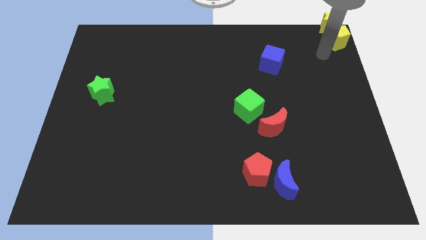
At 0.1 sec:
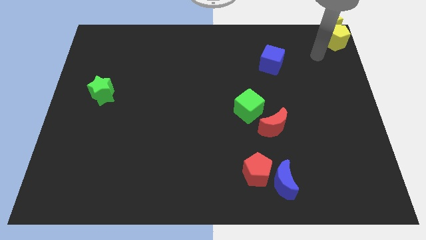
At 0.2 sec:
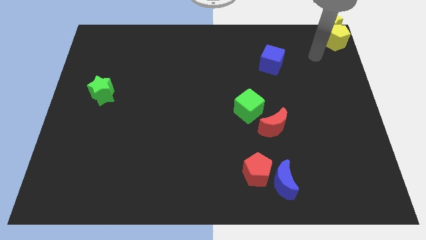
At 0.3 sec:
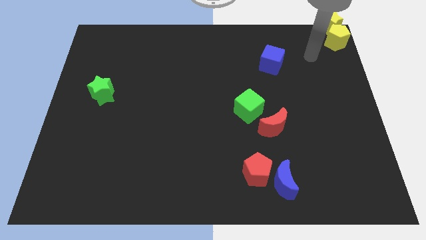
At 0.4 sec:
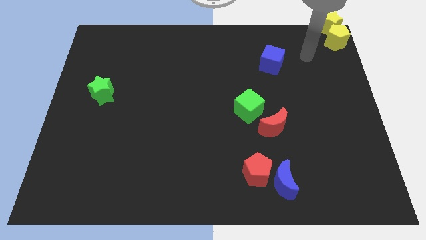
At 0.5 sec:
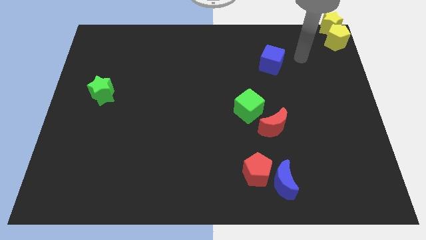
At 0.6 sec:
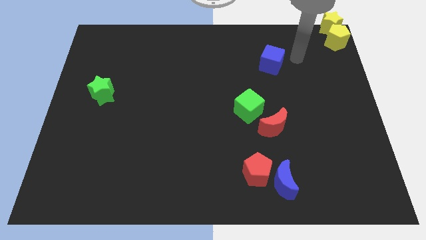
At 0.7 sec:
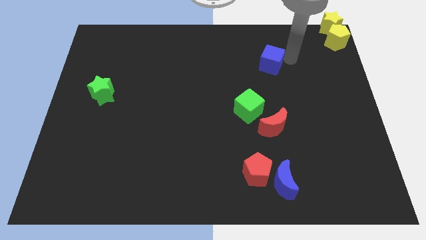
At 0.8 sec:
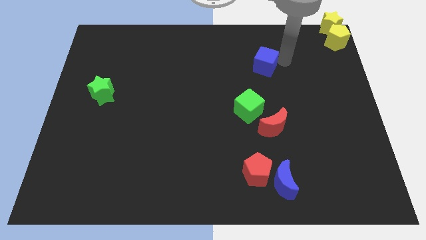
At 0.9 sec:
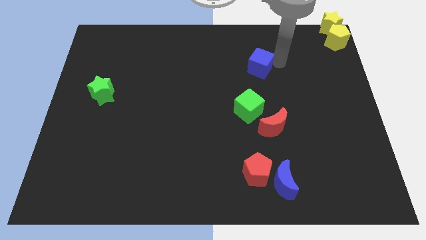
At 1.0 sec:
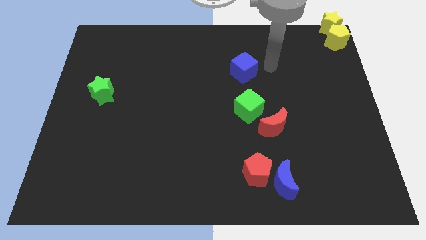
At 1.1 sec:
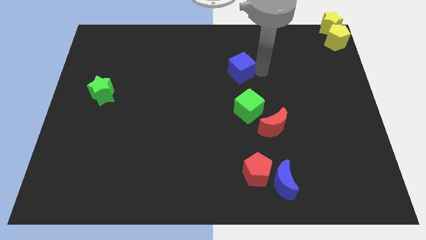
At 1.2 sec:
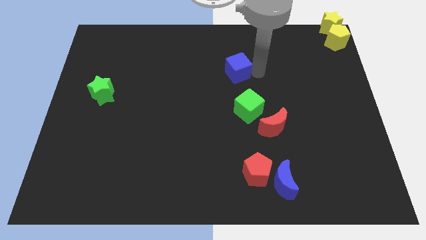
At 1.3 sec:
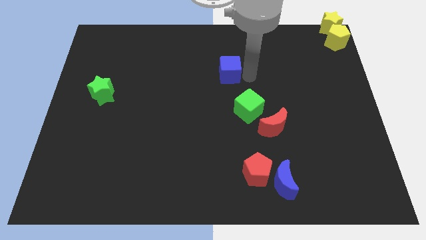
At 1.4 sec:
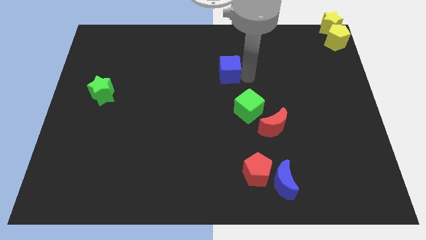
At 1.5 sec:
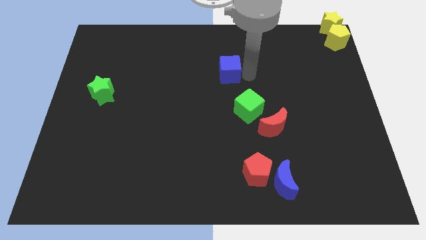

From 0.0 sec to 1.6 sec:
move the blue cube towards the green cube

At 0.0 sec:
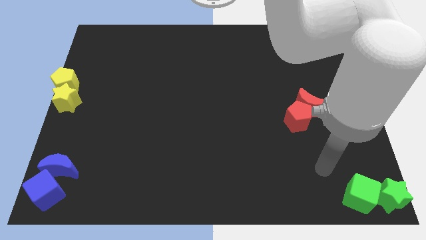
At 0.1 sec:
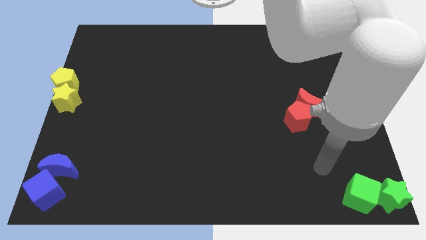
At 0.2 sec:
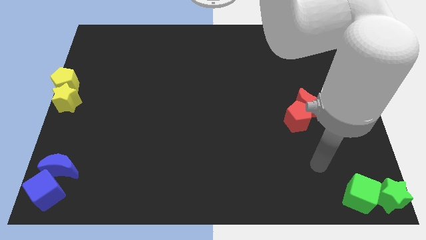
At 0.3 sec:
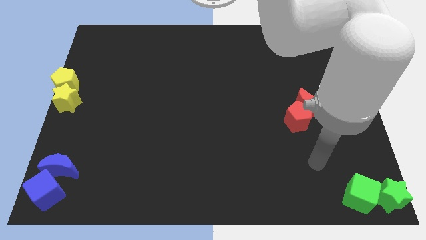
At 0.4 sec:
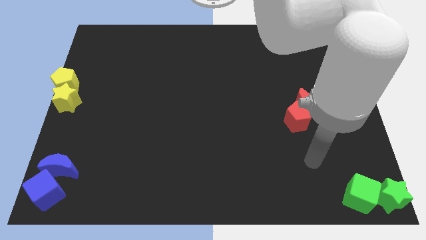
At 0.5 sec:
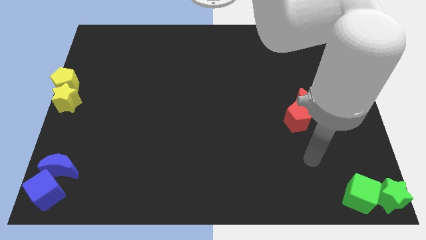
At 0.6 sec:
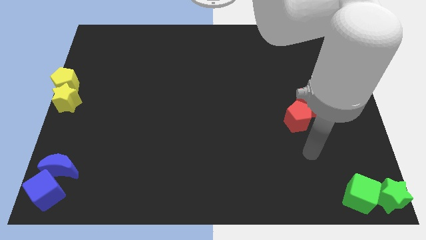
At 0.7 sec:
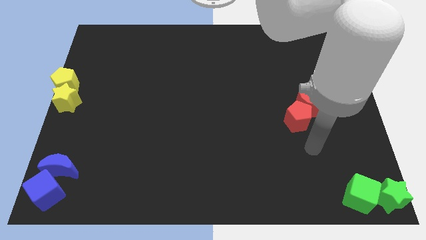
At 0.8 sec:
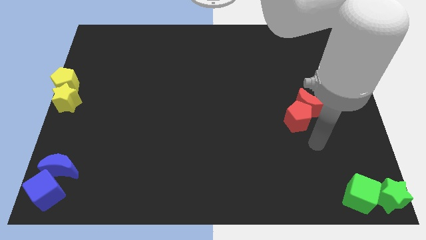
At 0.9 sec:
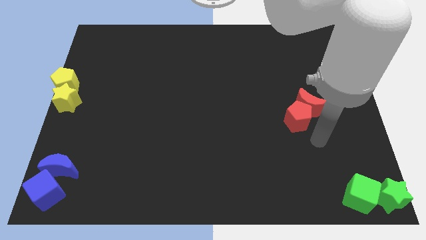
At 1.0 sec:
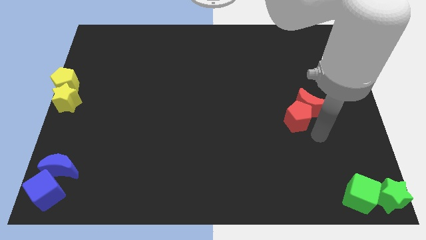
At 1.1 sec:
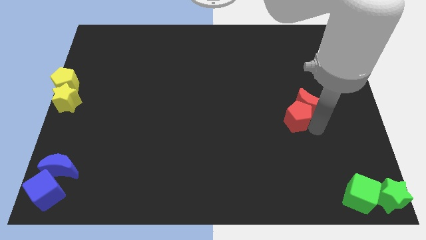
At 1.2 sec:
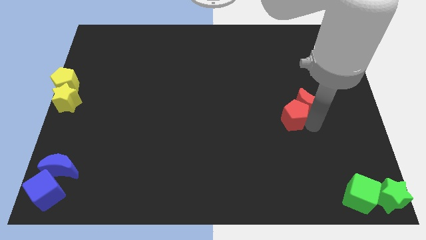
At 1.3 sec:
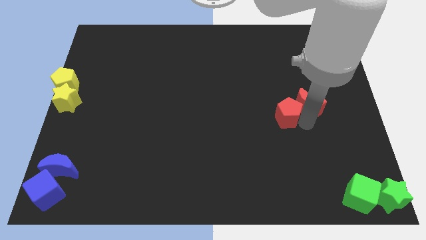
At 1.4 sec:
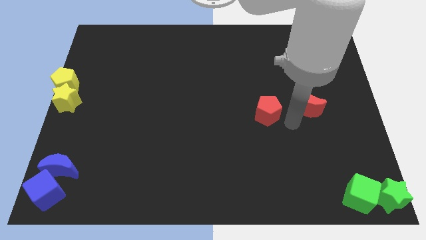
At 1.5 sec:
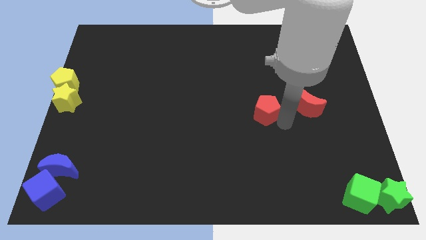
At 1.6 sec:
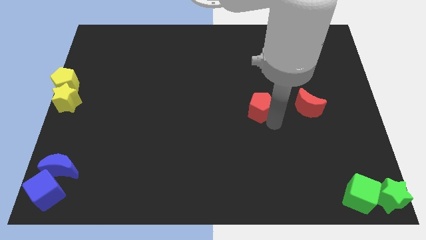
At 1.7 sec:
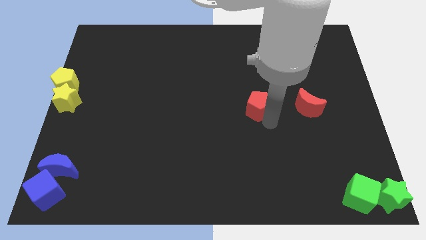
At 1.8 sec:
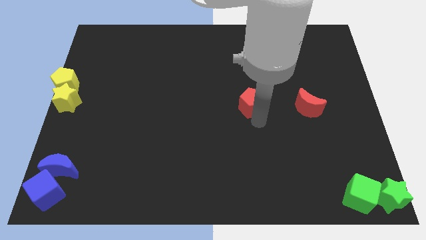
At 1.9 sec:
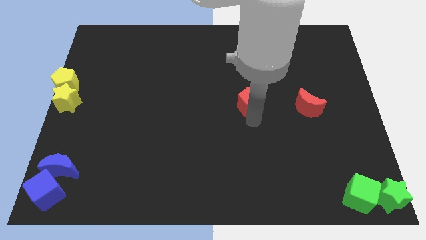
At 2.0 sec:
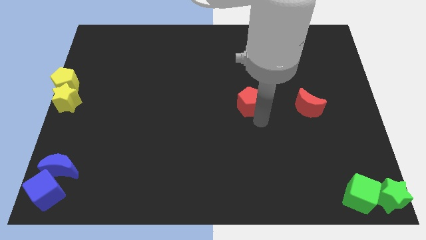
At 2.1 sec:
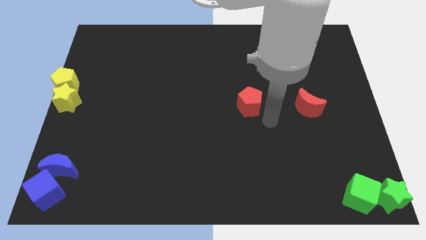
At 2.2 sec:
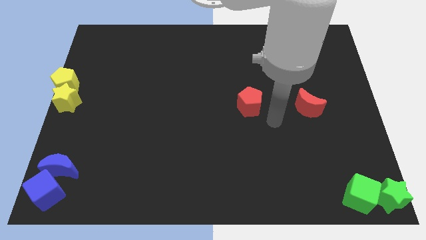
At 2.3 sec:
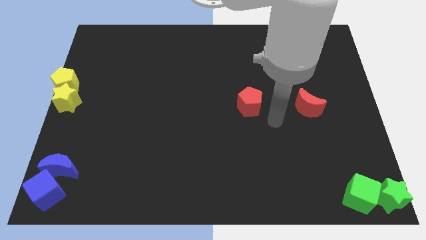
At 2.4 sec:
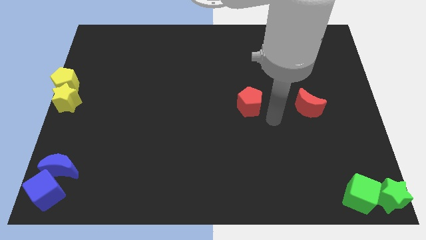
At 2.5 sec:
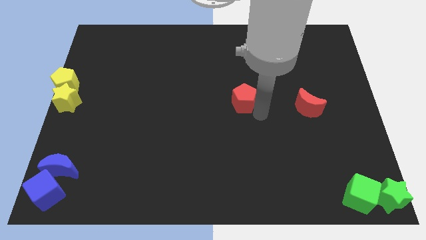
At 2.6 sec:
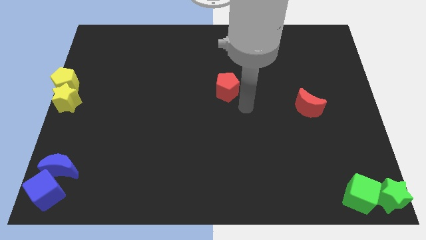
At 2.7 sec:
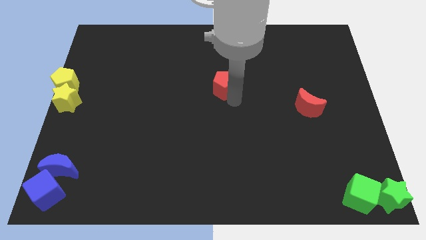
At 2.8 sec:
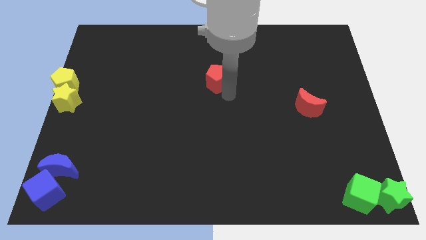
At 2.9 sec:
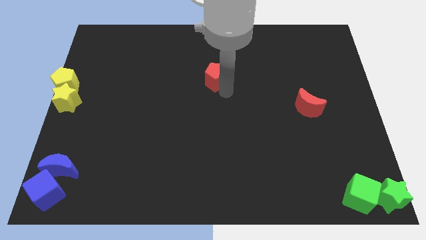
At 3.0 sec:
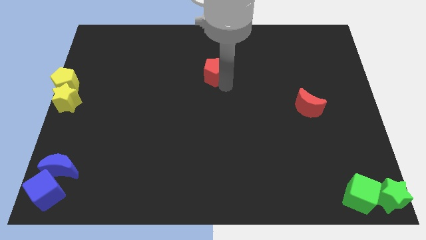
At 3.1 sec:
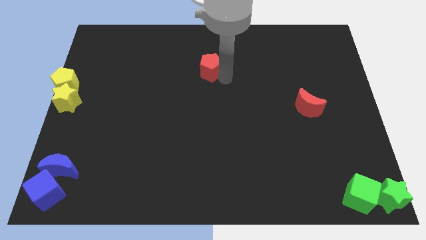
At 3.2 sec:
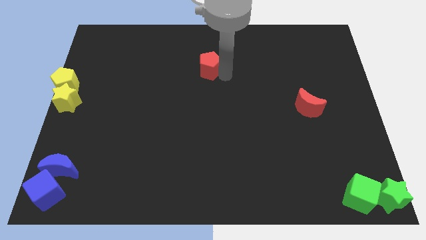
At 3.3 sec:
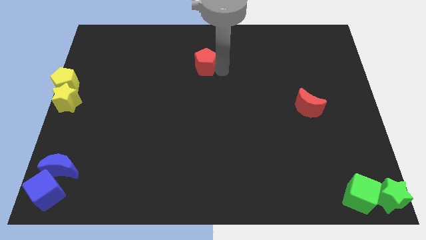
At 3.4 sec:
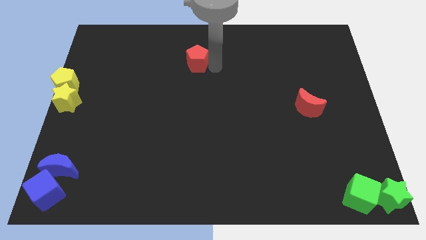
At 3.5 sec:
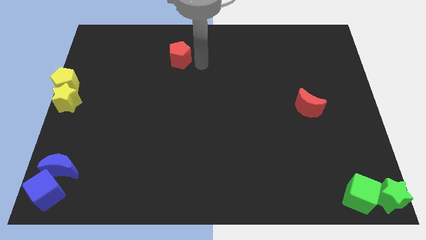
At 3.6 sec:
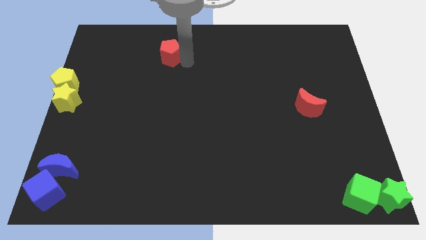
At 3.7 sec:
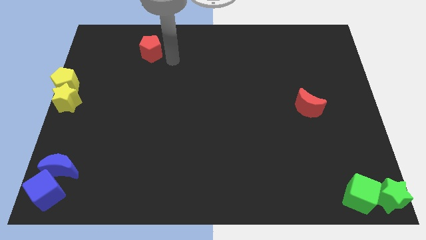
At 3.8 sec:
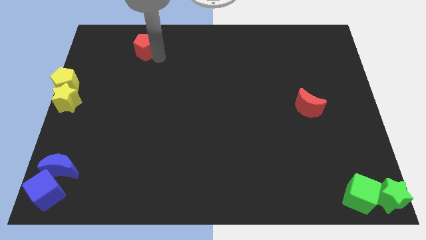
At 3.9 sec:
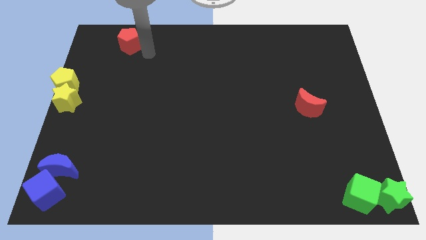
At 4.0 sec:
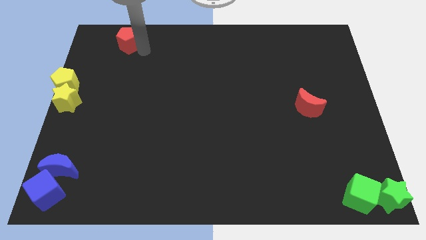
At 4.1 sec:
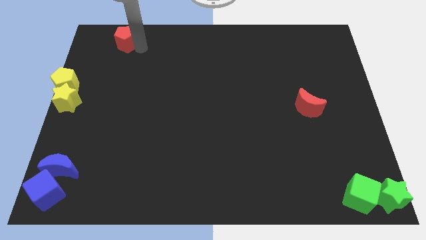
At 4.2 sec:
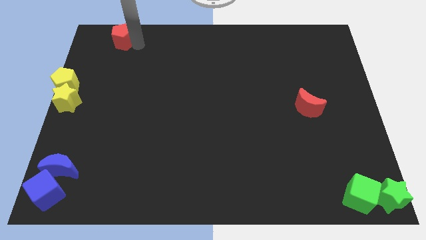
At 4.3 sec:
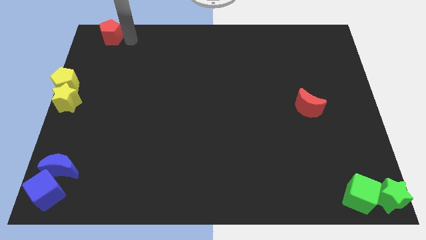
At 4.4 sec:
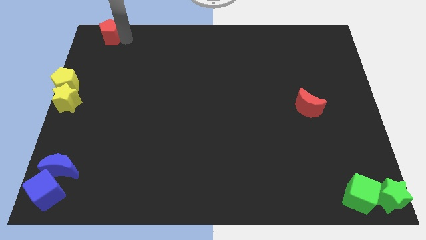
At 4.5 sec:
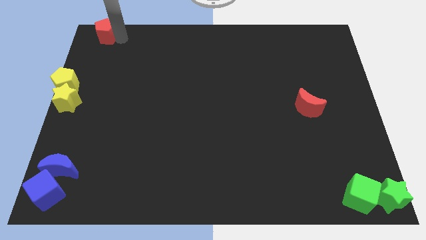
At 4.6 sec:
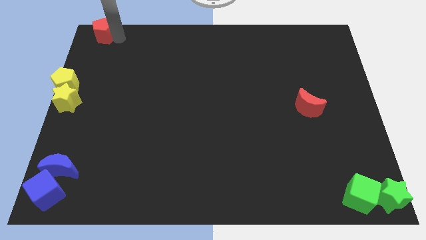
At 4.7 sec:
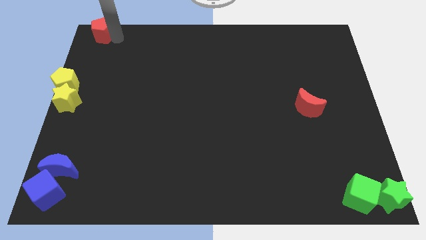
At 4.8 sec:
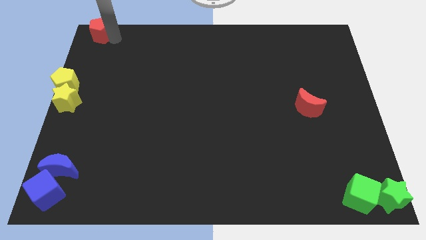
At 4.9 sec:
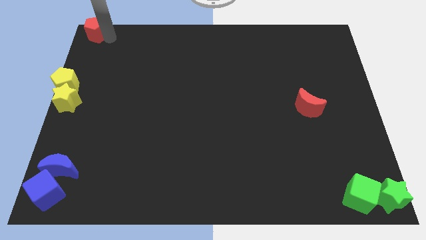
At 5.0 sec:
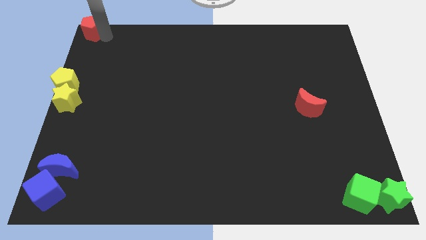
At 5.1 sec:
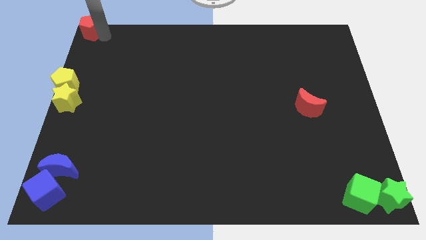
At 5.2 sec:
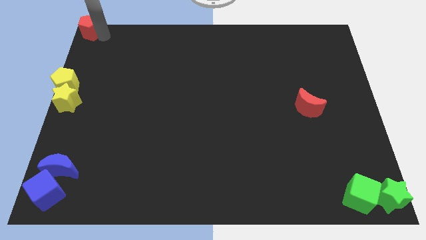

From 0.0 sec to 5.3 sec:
push the red pentagon to the top left corner of the board

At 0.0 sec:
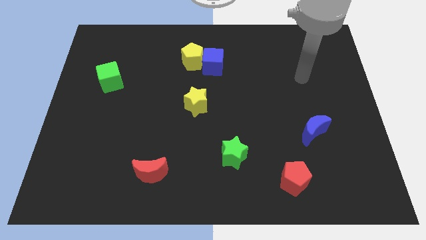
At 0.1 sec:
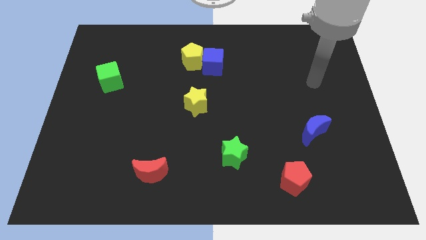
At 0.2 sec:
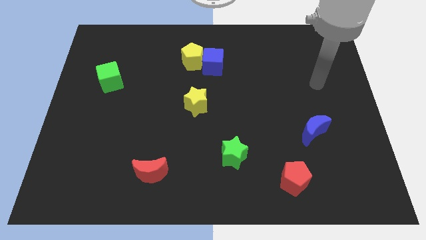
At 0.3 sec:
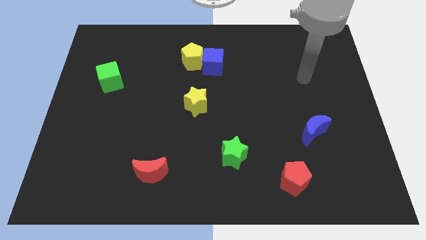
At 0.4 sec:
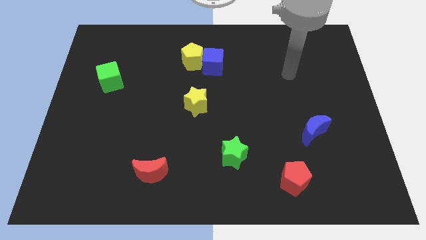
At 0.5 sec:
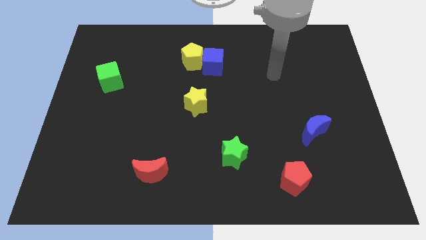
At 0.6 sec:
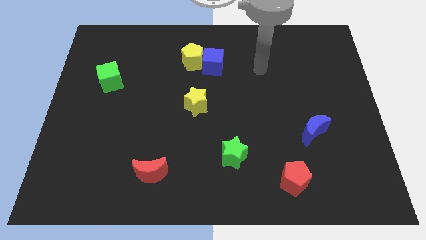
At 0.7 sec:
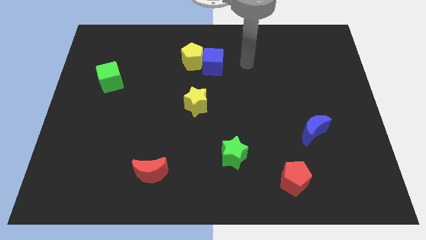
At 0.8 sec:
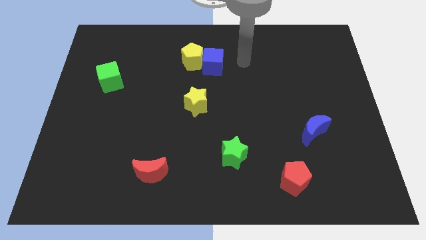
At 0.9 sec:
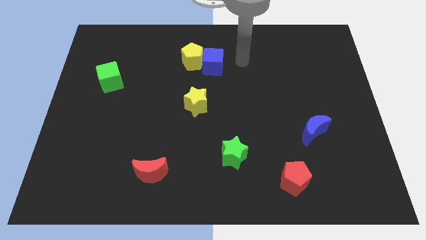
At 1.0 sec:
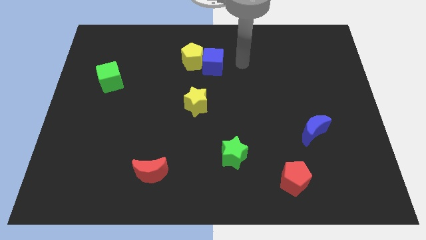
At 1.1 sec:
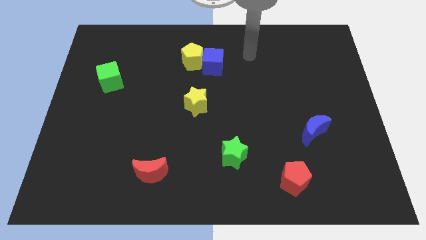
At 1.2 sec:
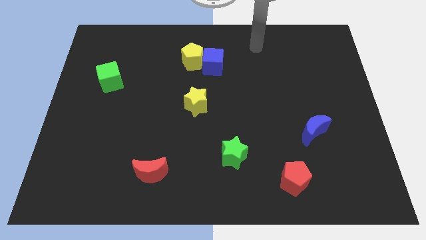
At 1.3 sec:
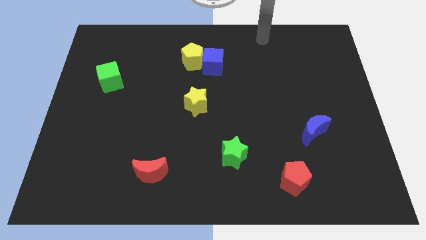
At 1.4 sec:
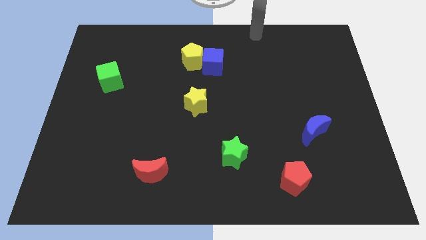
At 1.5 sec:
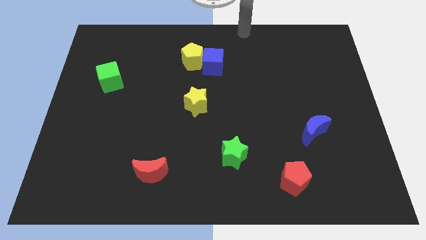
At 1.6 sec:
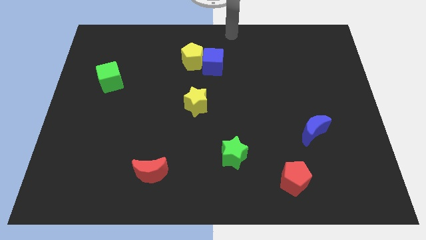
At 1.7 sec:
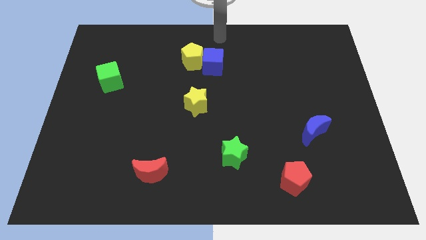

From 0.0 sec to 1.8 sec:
place your arm above the blue cube

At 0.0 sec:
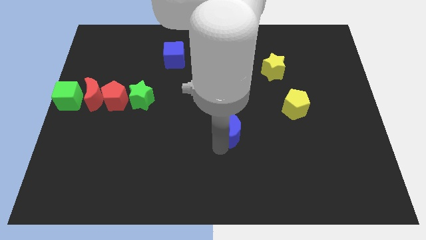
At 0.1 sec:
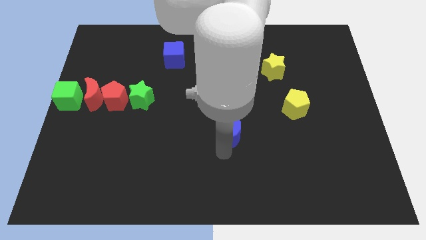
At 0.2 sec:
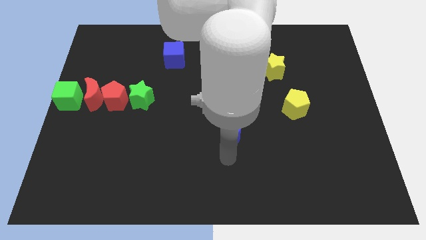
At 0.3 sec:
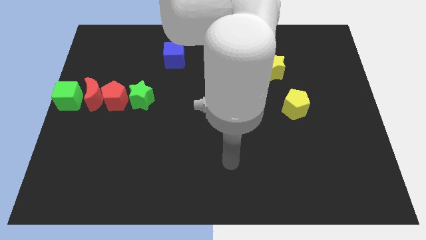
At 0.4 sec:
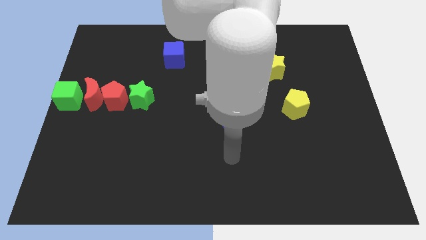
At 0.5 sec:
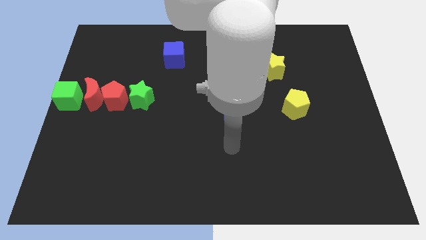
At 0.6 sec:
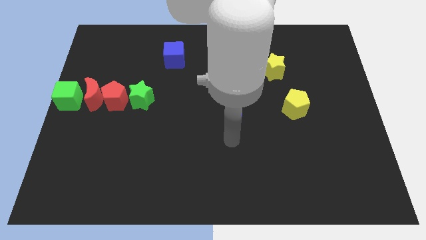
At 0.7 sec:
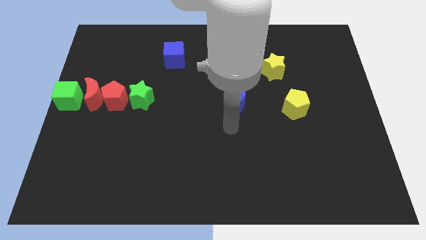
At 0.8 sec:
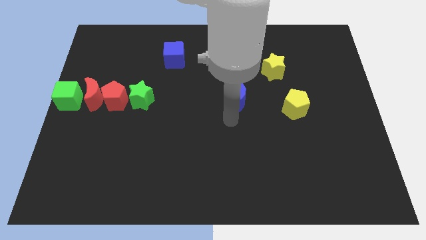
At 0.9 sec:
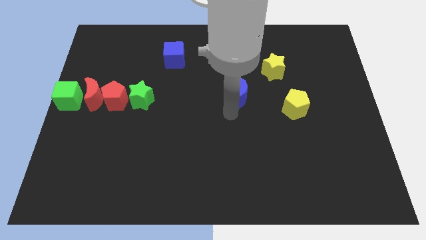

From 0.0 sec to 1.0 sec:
push the blue moon towards the top side of the board
